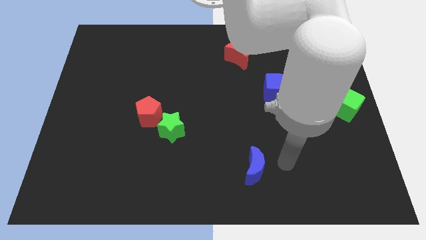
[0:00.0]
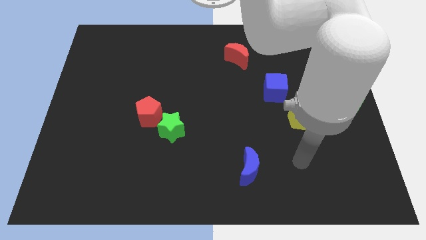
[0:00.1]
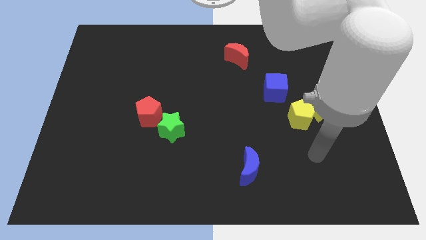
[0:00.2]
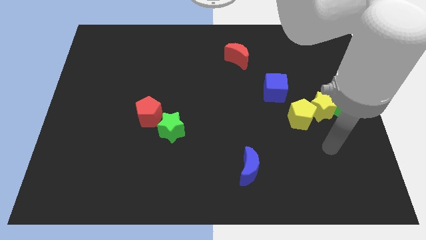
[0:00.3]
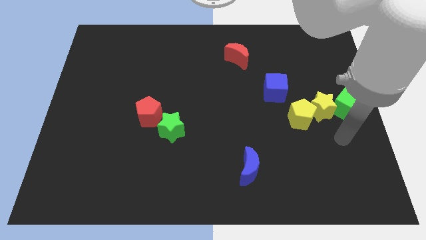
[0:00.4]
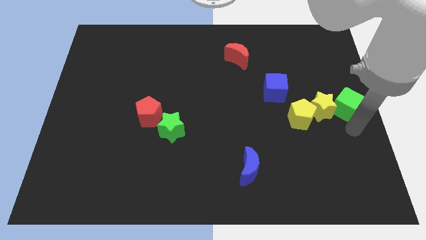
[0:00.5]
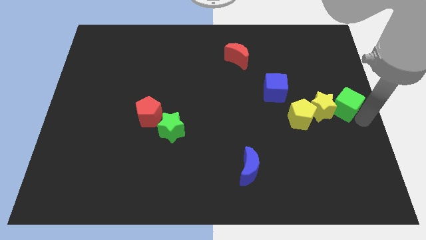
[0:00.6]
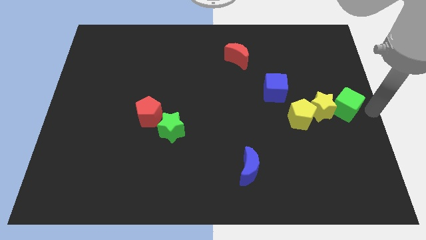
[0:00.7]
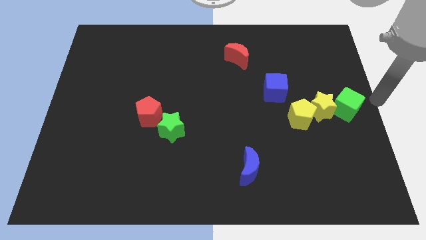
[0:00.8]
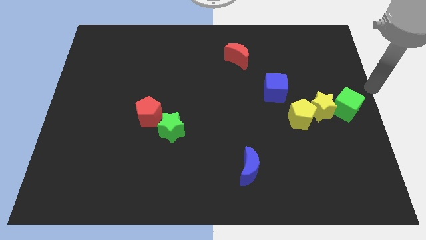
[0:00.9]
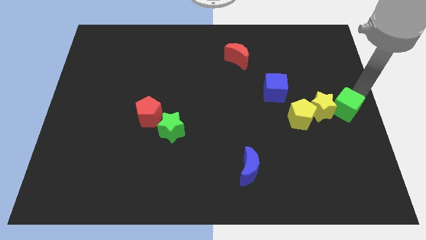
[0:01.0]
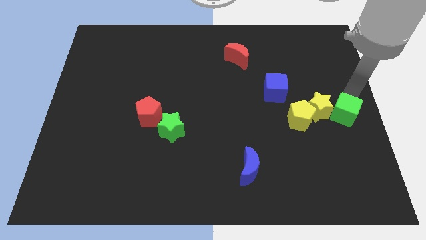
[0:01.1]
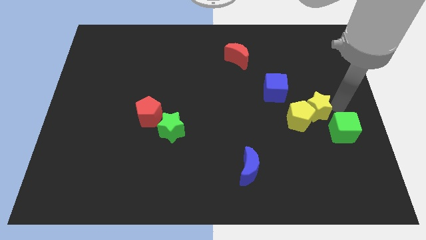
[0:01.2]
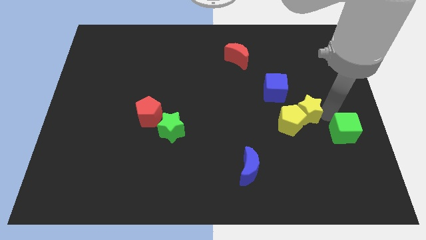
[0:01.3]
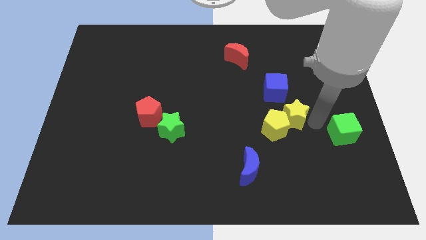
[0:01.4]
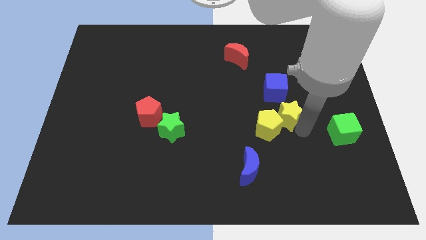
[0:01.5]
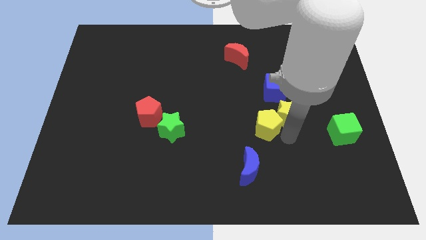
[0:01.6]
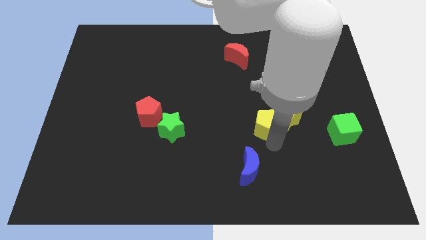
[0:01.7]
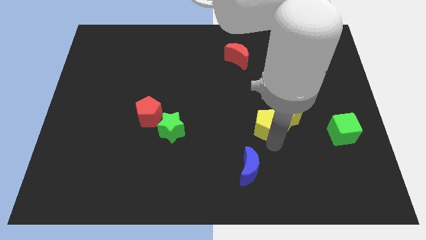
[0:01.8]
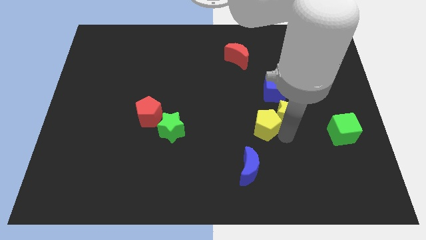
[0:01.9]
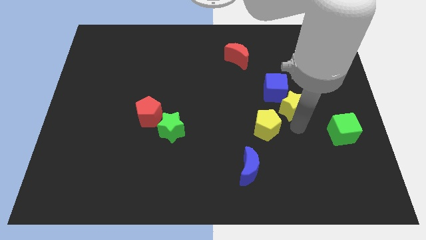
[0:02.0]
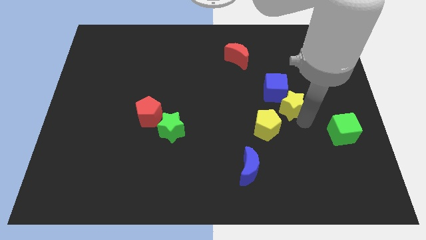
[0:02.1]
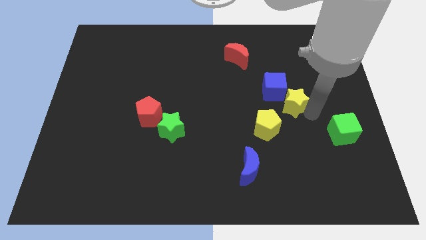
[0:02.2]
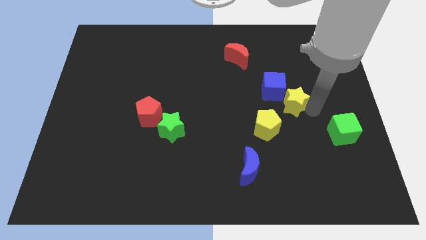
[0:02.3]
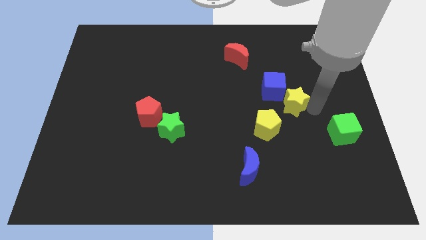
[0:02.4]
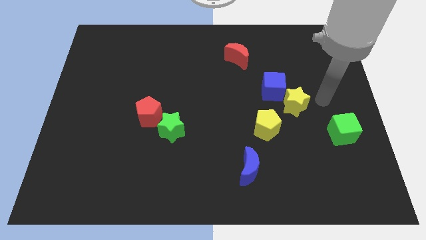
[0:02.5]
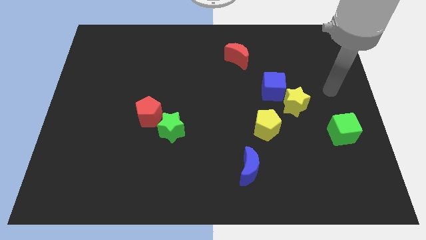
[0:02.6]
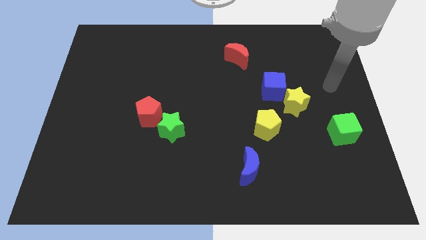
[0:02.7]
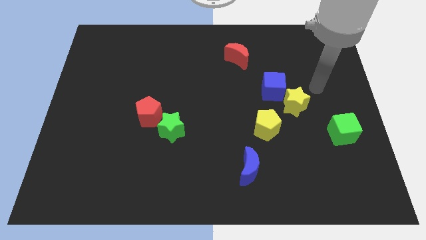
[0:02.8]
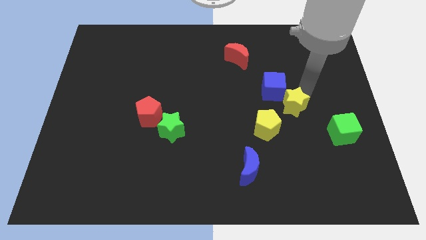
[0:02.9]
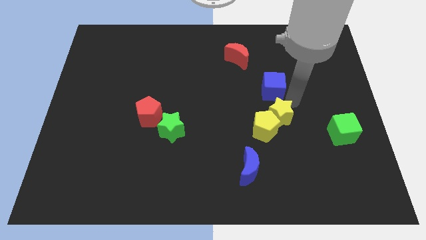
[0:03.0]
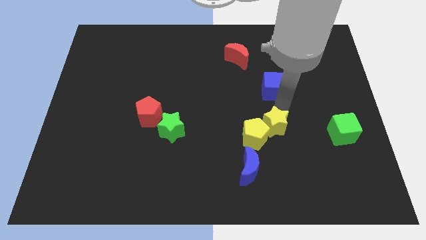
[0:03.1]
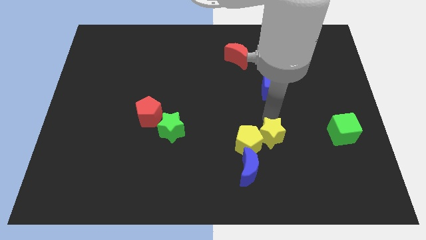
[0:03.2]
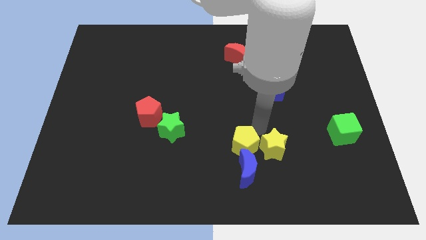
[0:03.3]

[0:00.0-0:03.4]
place yellow pentagon on top of blue crescent

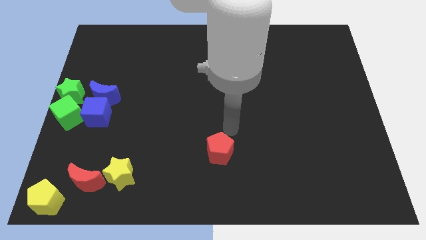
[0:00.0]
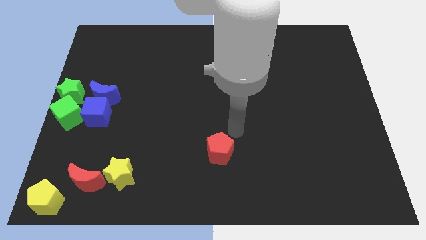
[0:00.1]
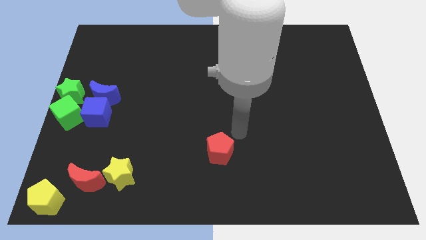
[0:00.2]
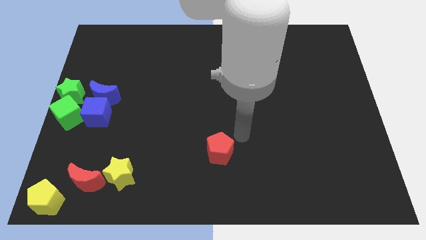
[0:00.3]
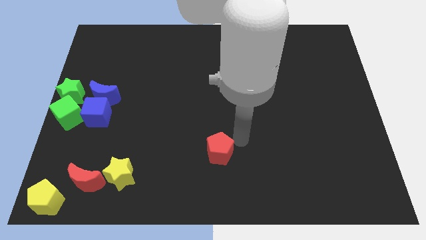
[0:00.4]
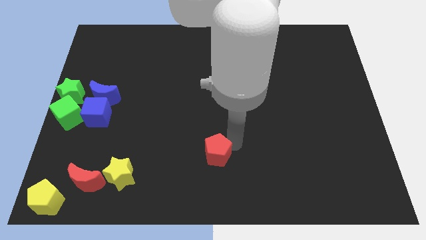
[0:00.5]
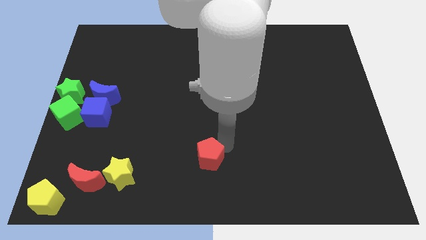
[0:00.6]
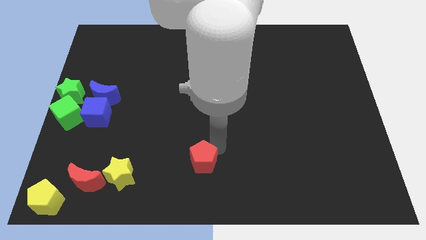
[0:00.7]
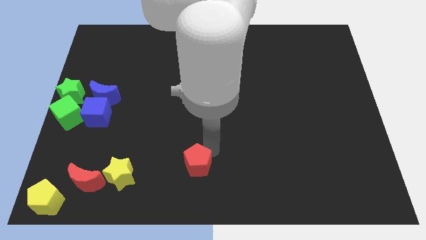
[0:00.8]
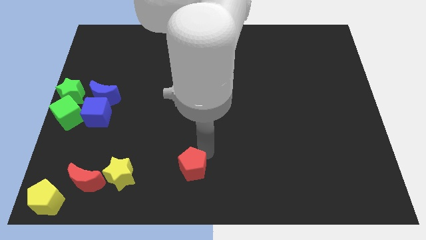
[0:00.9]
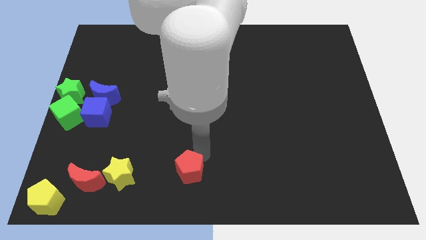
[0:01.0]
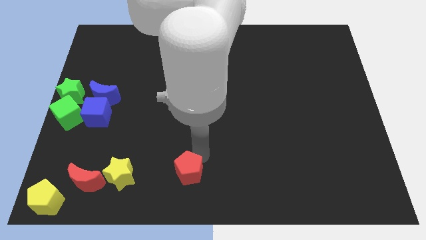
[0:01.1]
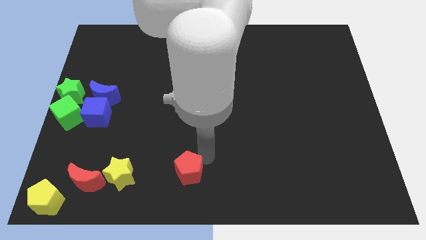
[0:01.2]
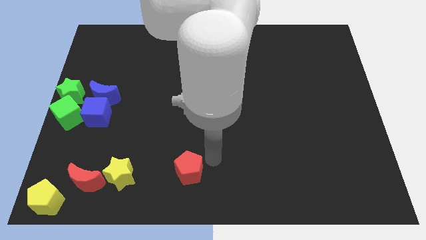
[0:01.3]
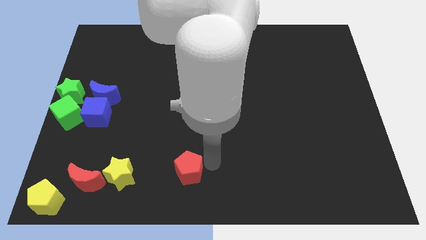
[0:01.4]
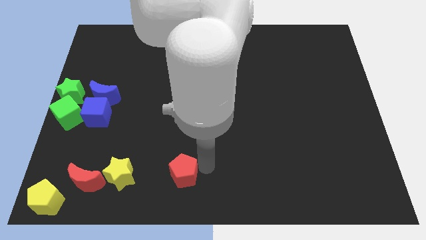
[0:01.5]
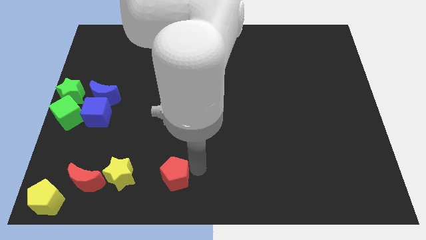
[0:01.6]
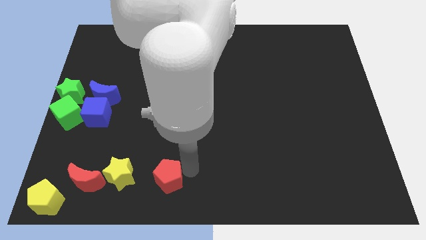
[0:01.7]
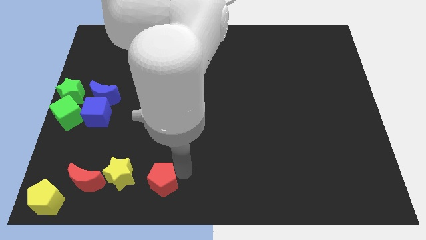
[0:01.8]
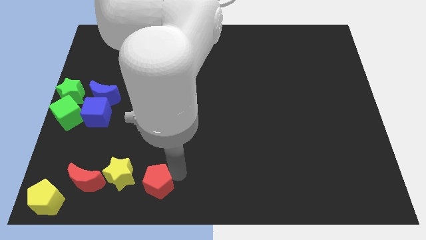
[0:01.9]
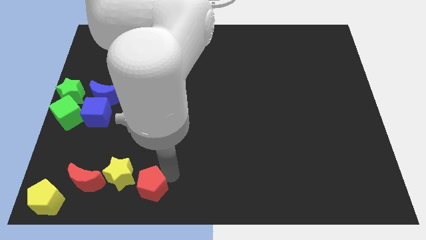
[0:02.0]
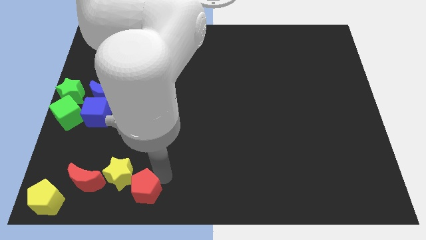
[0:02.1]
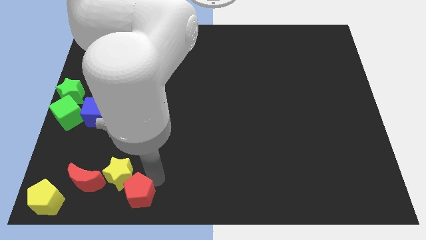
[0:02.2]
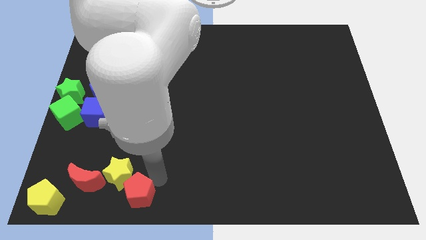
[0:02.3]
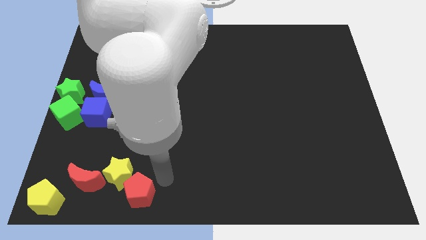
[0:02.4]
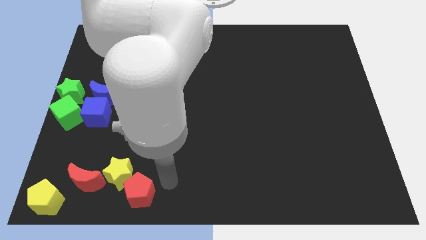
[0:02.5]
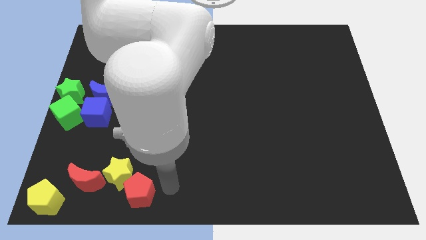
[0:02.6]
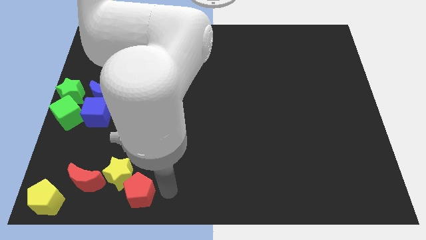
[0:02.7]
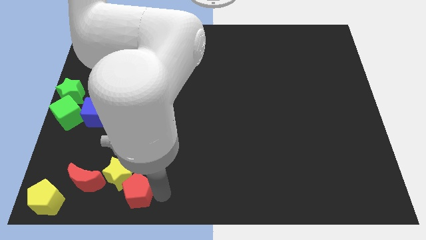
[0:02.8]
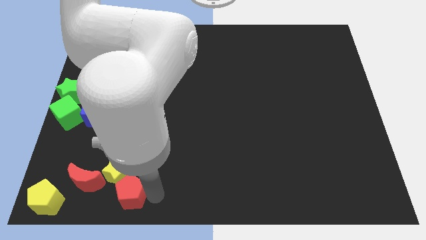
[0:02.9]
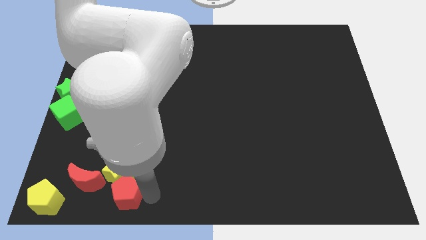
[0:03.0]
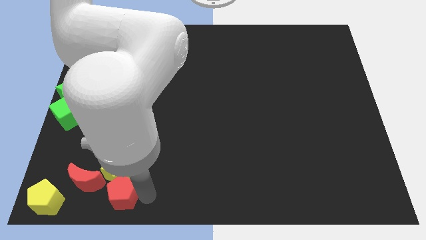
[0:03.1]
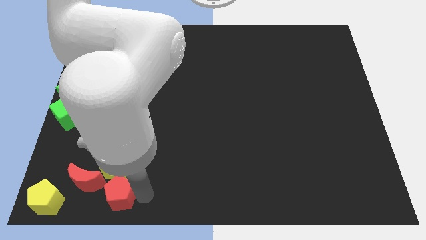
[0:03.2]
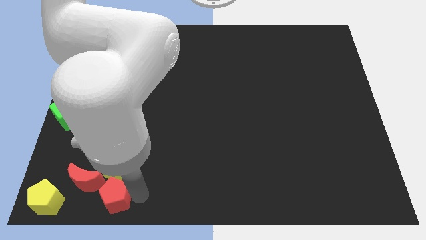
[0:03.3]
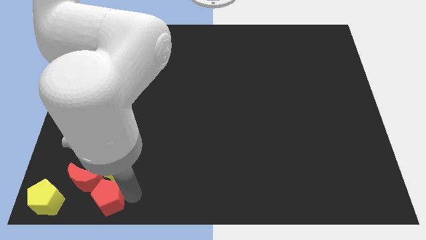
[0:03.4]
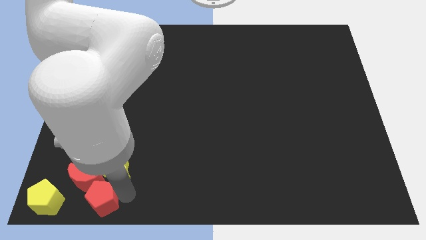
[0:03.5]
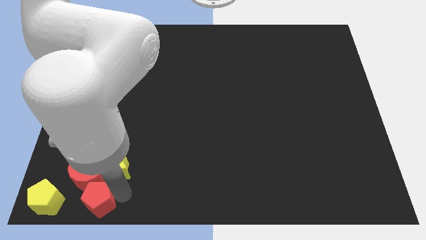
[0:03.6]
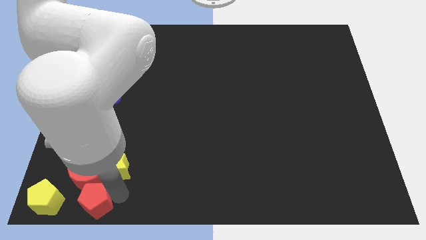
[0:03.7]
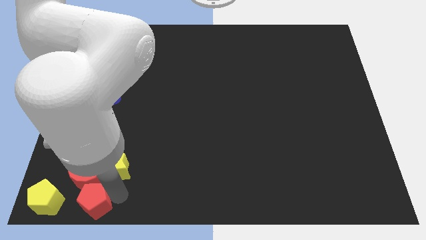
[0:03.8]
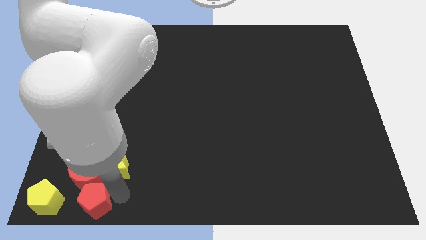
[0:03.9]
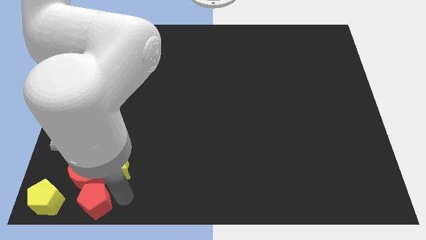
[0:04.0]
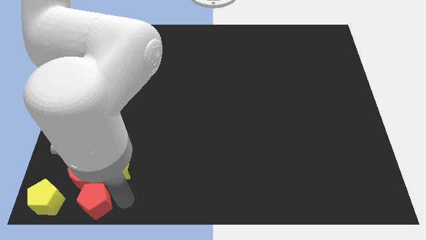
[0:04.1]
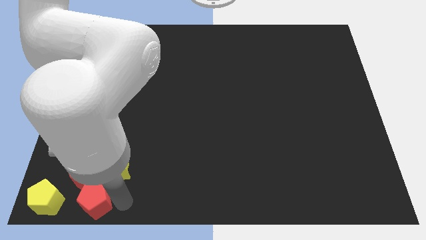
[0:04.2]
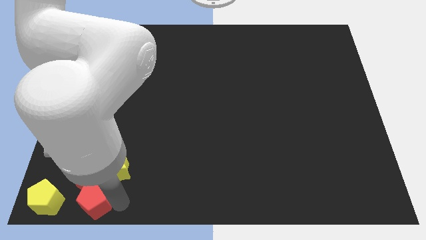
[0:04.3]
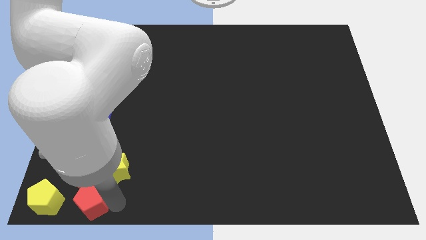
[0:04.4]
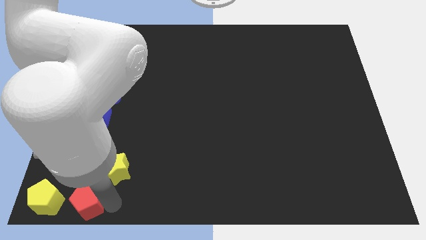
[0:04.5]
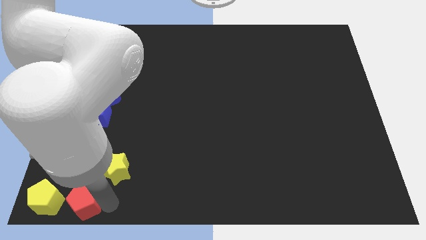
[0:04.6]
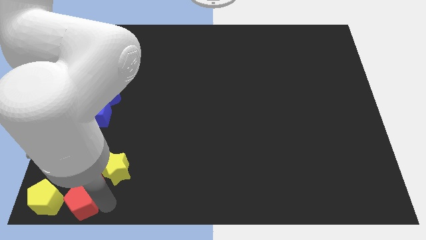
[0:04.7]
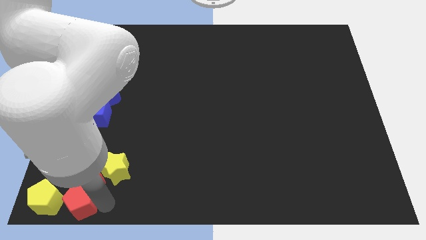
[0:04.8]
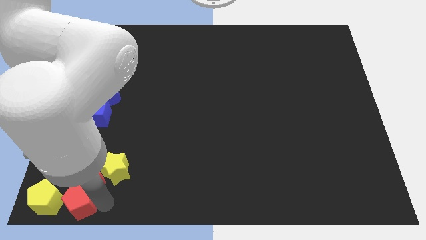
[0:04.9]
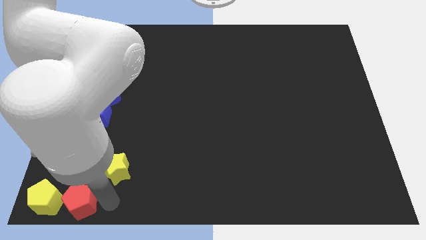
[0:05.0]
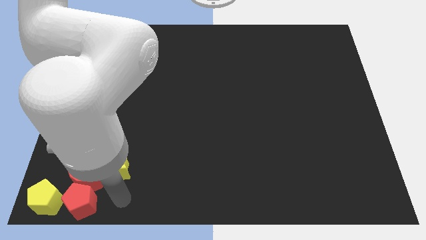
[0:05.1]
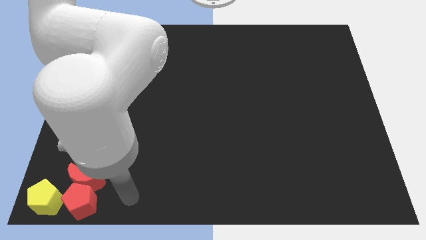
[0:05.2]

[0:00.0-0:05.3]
push the red pentagon towards the right side of the yellow pentagon

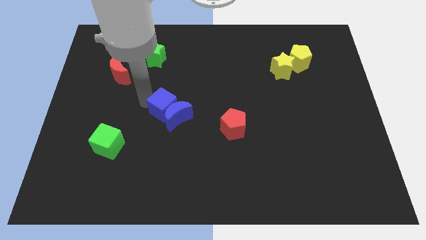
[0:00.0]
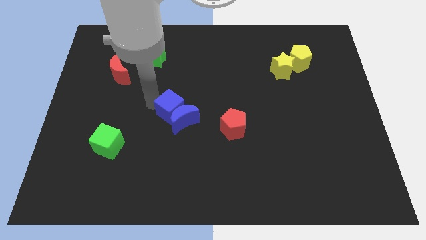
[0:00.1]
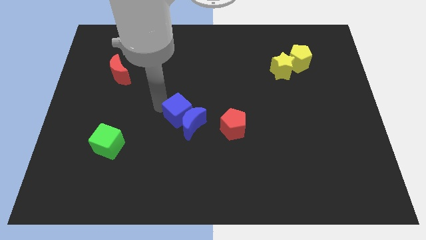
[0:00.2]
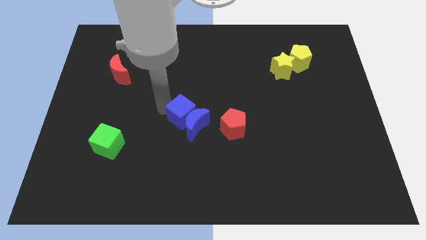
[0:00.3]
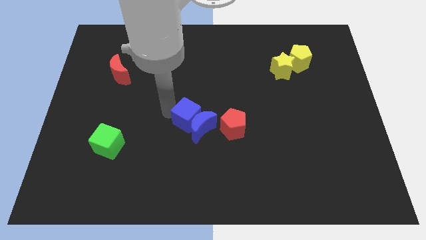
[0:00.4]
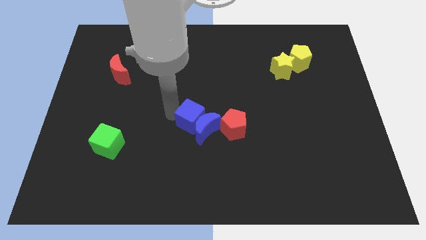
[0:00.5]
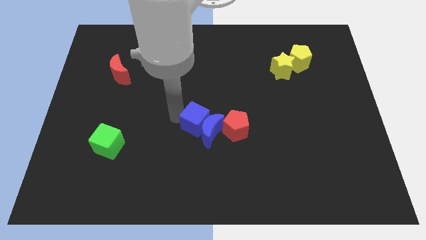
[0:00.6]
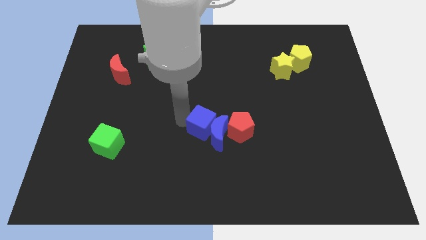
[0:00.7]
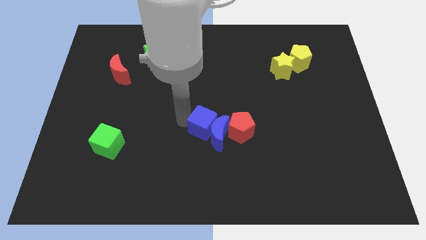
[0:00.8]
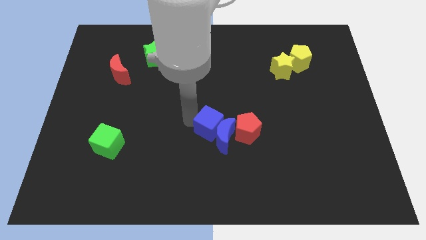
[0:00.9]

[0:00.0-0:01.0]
push blue cube in blue moon
